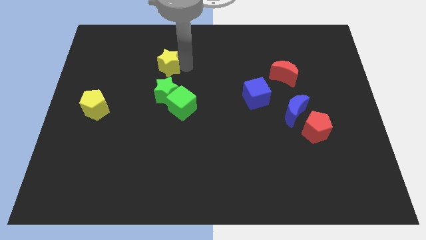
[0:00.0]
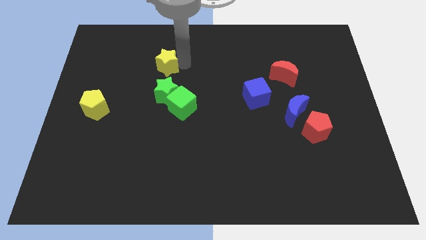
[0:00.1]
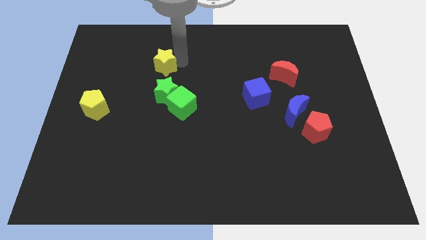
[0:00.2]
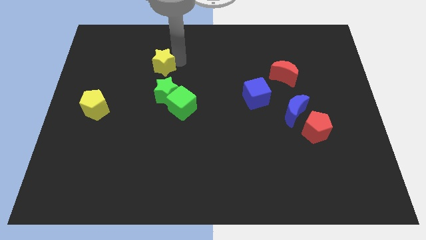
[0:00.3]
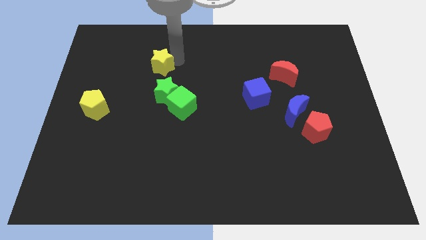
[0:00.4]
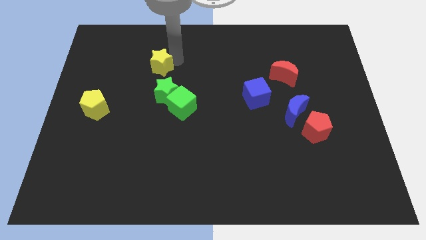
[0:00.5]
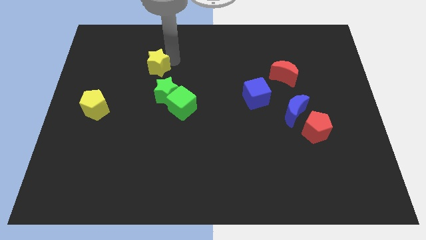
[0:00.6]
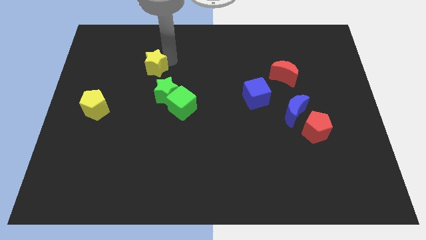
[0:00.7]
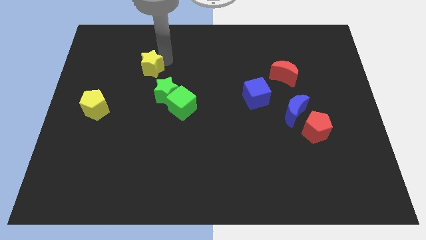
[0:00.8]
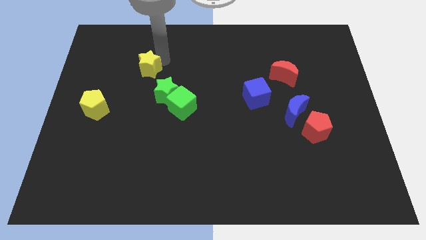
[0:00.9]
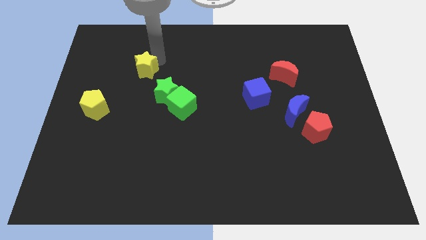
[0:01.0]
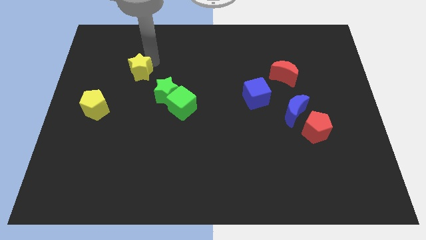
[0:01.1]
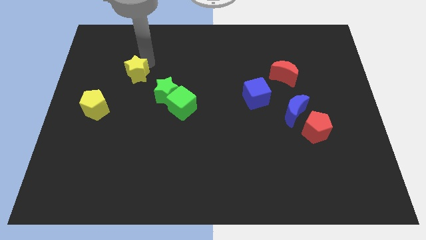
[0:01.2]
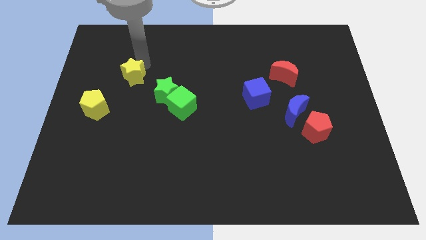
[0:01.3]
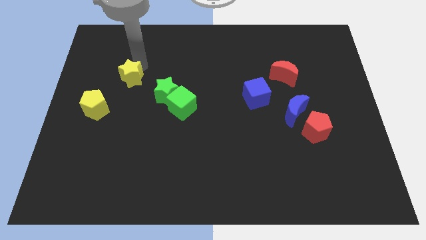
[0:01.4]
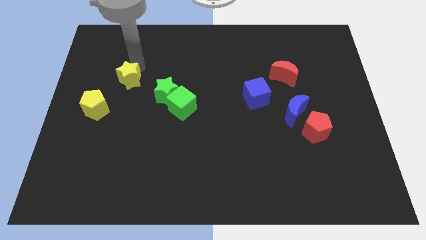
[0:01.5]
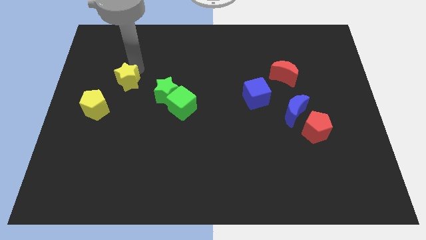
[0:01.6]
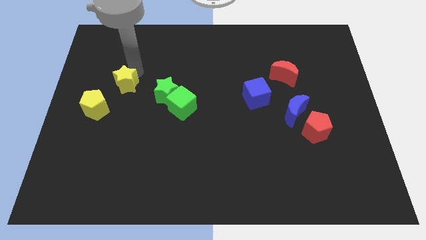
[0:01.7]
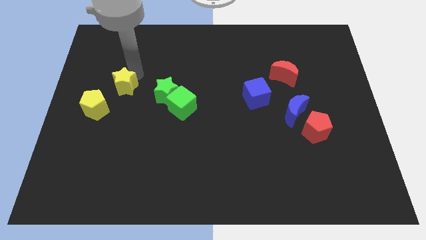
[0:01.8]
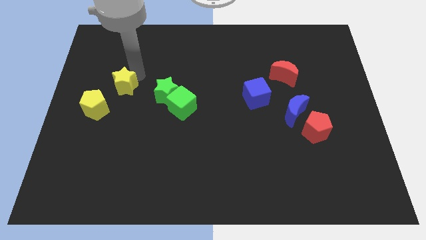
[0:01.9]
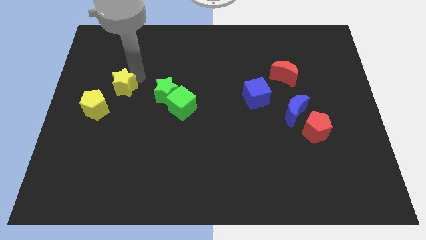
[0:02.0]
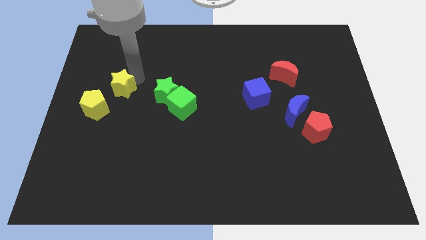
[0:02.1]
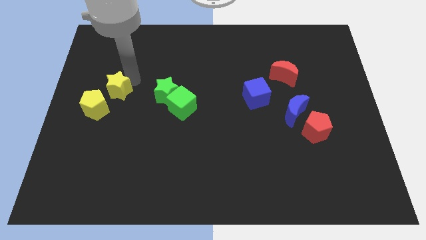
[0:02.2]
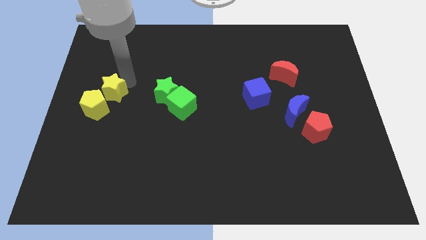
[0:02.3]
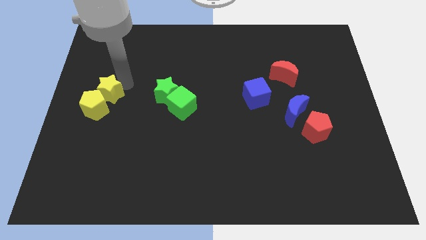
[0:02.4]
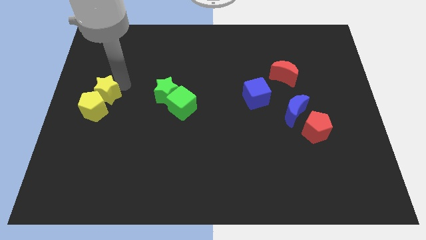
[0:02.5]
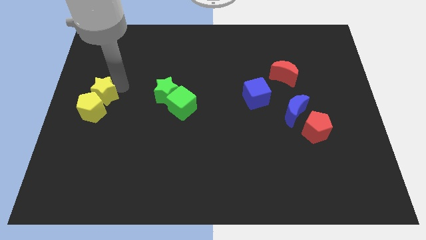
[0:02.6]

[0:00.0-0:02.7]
place the yellow star to the top of the yellow pentagon

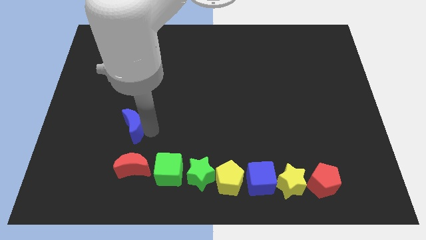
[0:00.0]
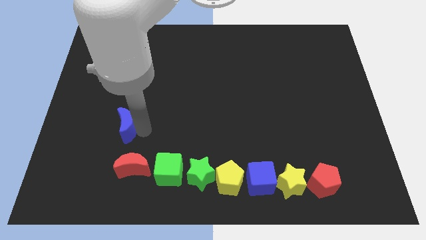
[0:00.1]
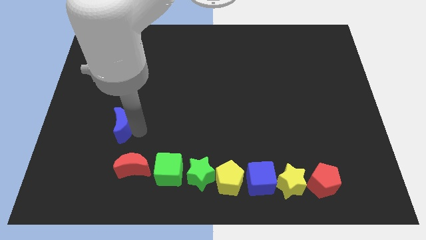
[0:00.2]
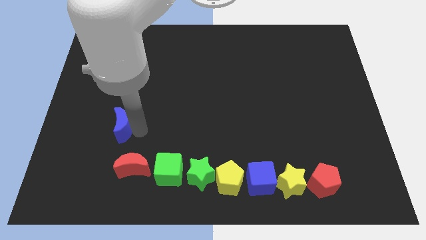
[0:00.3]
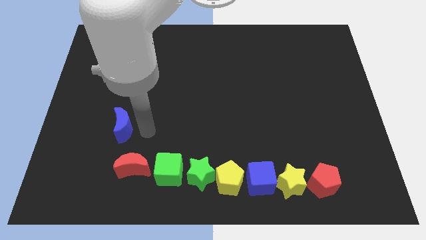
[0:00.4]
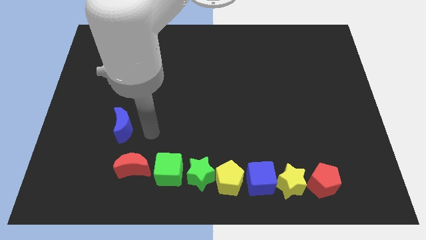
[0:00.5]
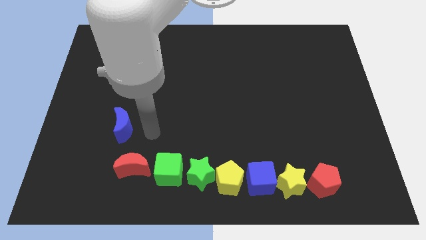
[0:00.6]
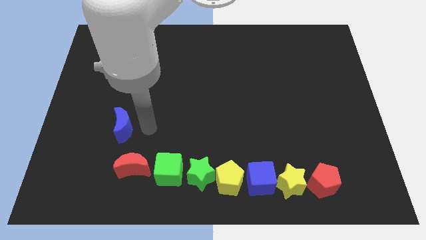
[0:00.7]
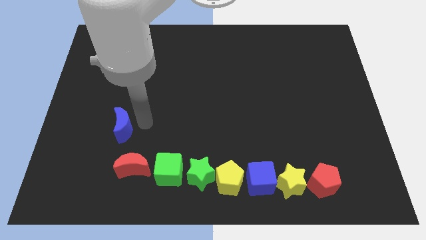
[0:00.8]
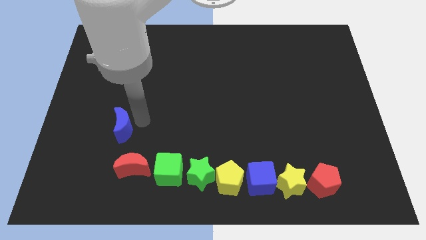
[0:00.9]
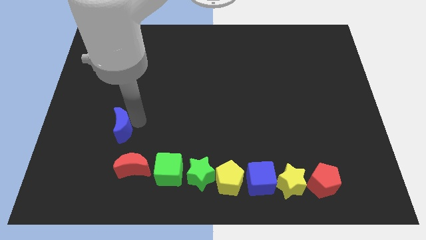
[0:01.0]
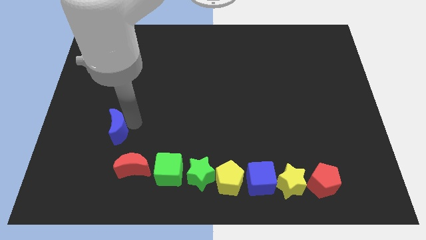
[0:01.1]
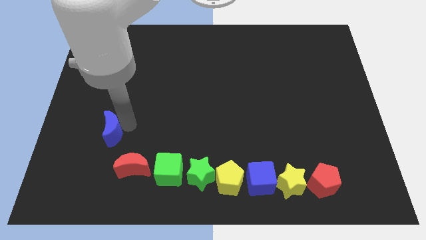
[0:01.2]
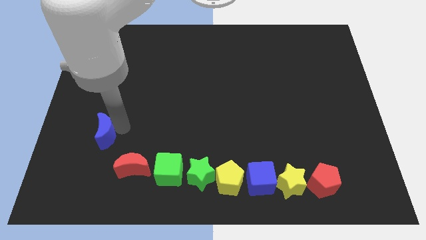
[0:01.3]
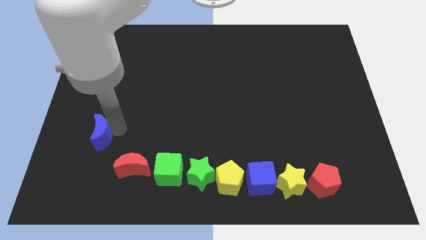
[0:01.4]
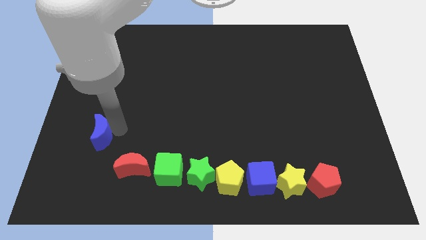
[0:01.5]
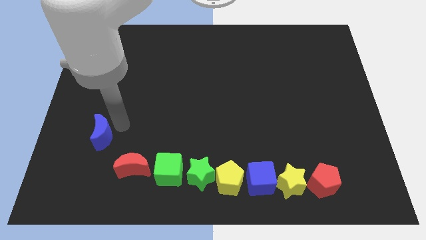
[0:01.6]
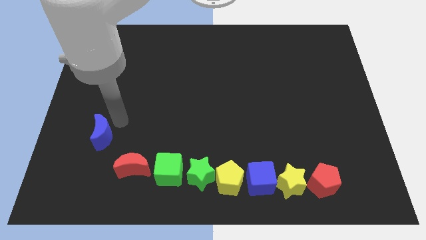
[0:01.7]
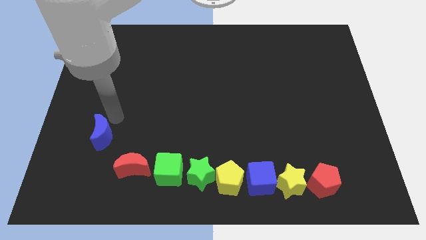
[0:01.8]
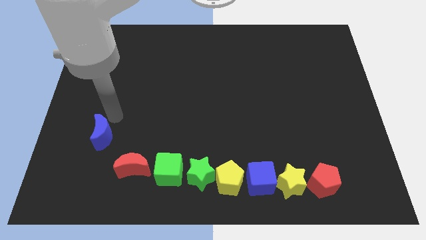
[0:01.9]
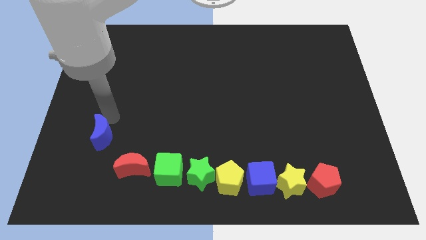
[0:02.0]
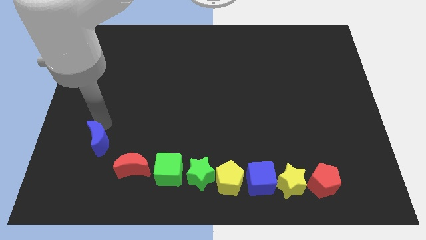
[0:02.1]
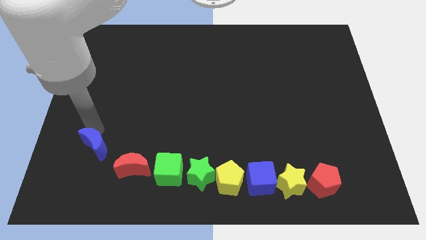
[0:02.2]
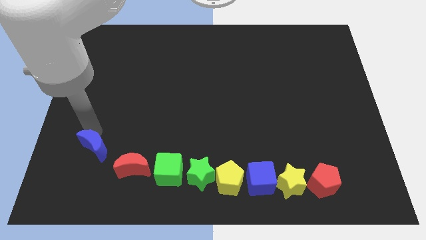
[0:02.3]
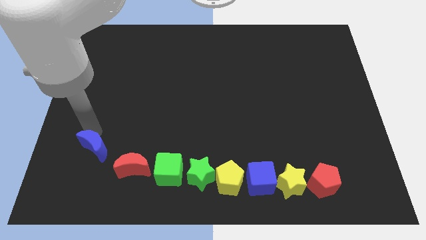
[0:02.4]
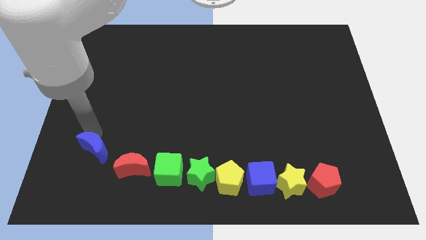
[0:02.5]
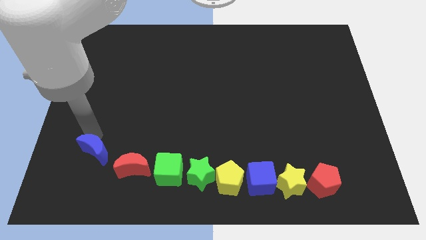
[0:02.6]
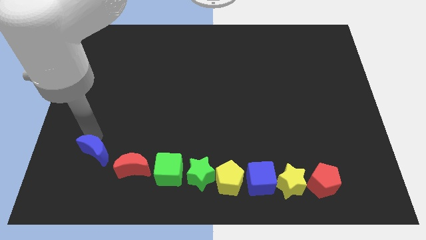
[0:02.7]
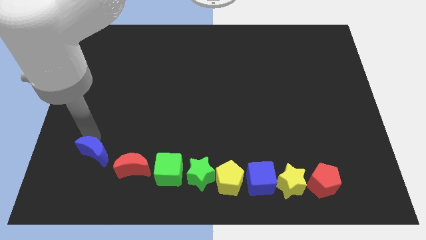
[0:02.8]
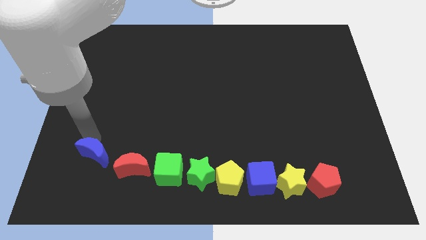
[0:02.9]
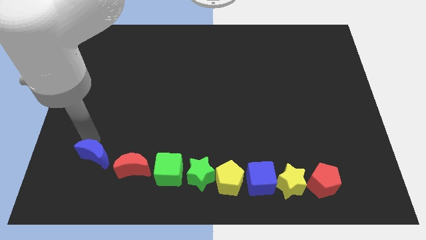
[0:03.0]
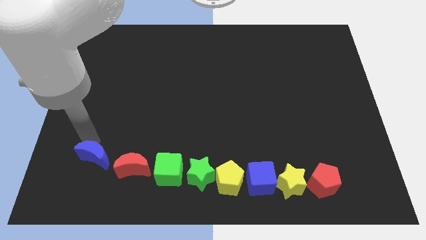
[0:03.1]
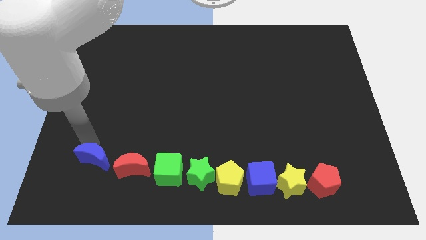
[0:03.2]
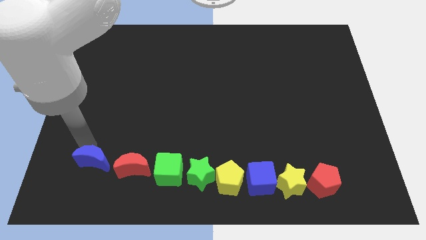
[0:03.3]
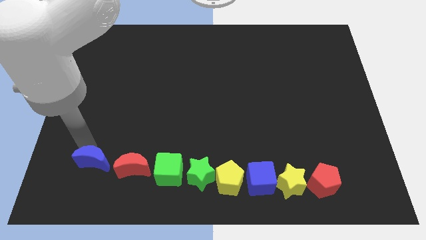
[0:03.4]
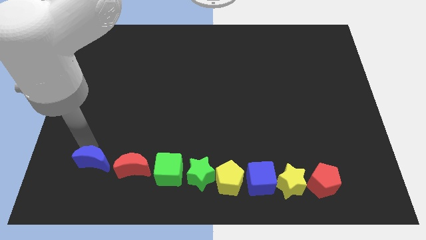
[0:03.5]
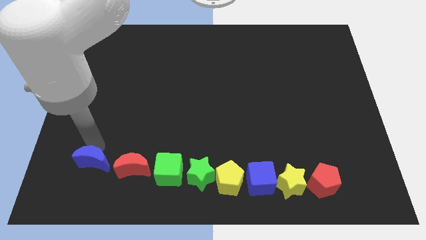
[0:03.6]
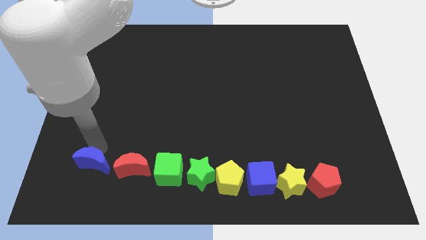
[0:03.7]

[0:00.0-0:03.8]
move the blue crescent towards the left side of the red crescent

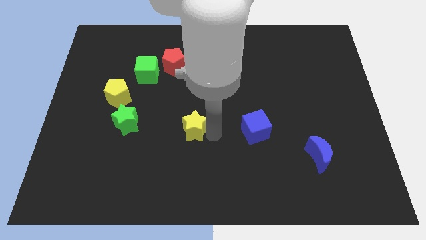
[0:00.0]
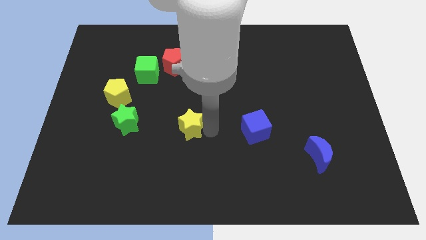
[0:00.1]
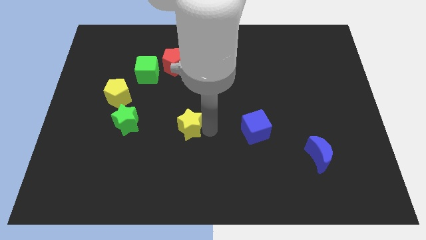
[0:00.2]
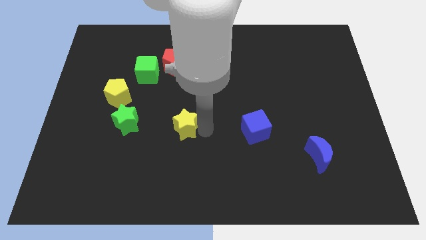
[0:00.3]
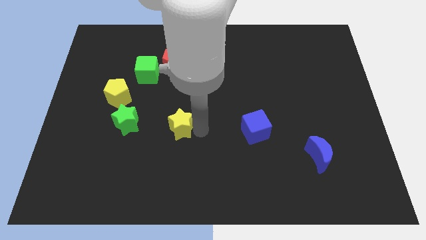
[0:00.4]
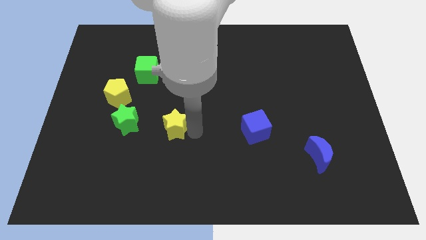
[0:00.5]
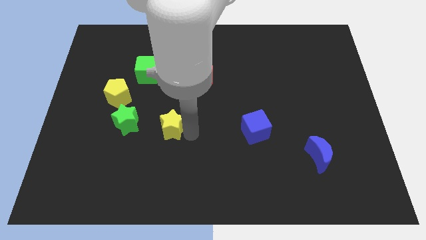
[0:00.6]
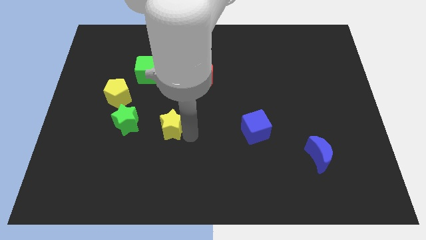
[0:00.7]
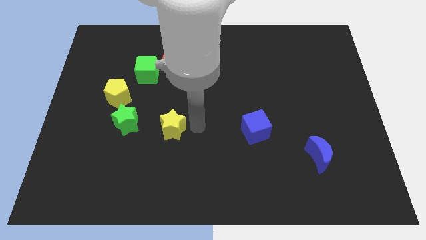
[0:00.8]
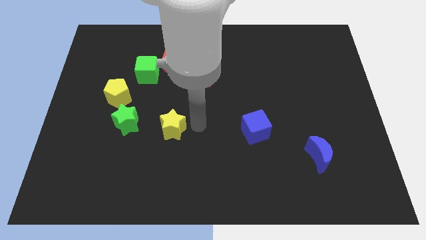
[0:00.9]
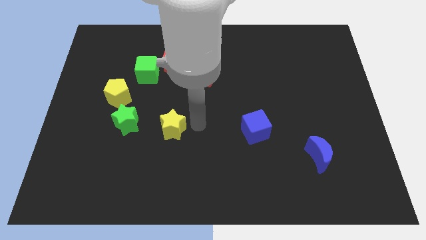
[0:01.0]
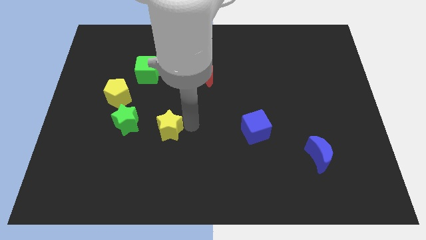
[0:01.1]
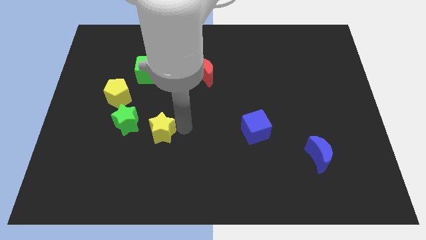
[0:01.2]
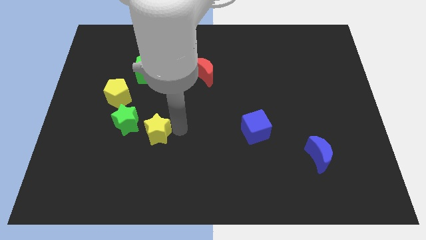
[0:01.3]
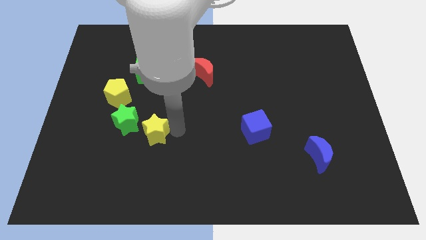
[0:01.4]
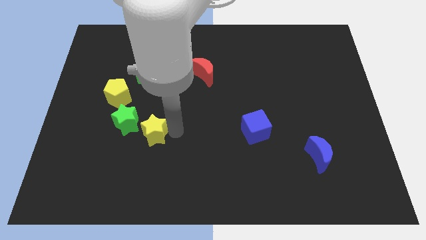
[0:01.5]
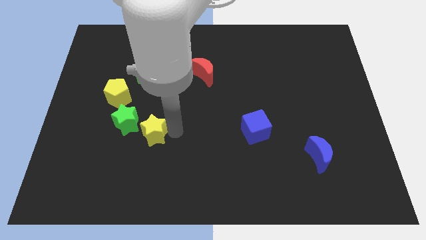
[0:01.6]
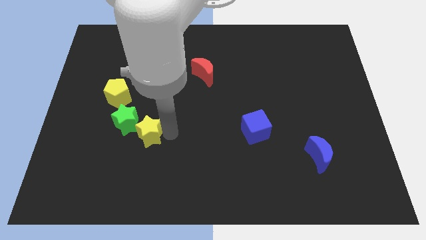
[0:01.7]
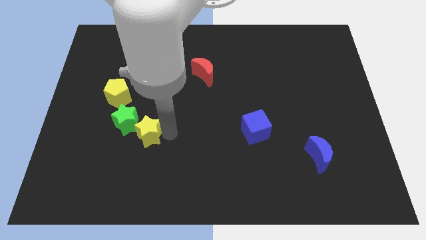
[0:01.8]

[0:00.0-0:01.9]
place the yellow star diagonally bottom right to the green star

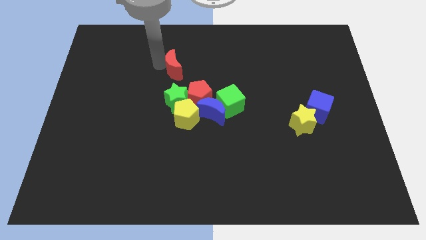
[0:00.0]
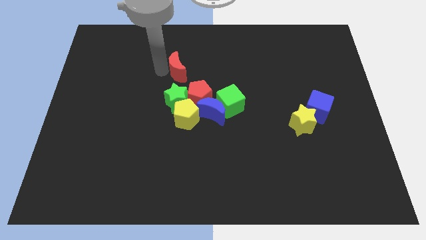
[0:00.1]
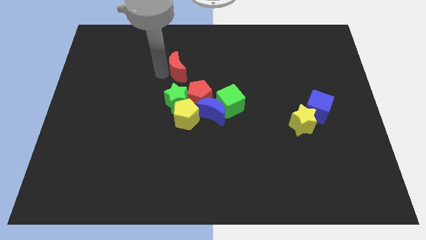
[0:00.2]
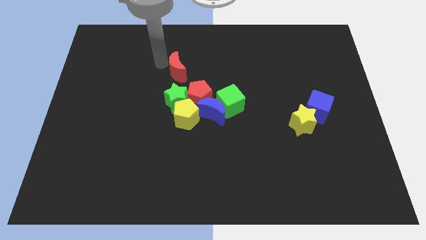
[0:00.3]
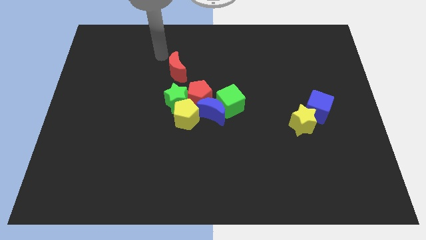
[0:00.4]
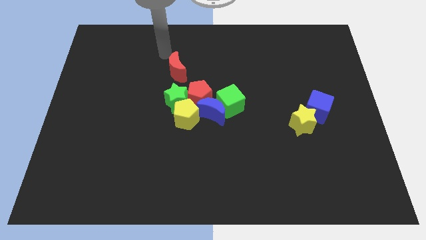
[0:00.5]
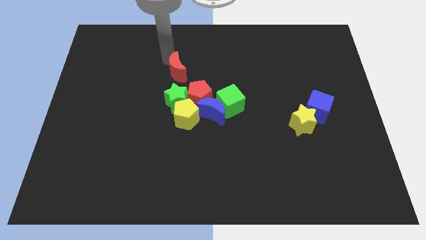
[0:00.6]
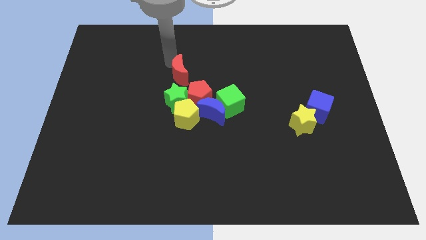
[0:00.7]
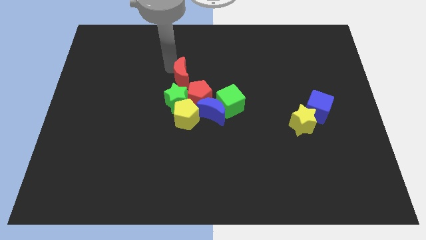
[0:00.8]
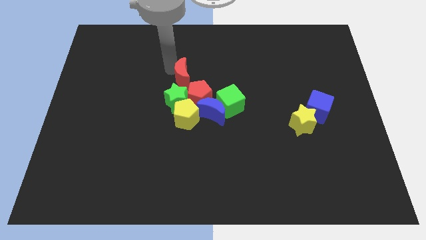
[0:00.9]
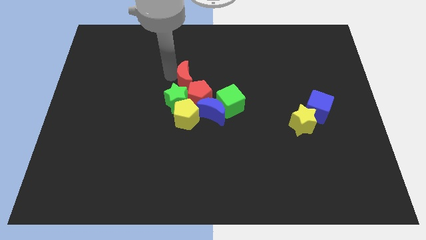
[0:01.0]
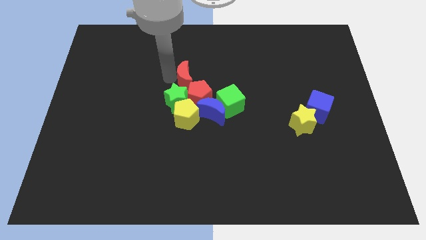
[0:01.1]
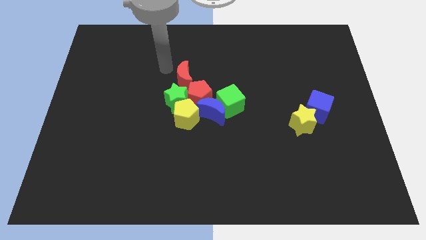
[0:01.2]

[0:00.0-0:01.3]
move the red crescent to the top of the red pentagon
